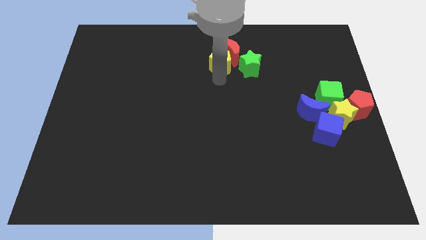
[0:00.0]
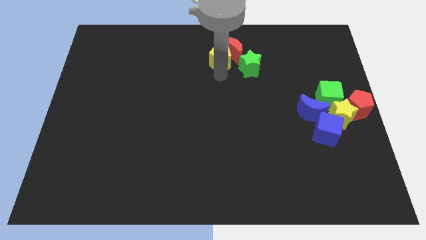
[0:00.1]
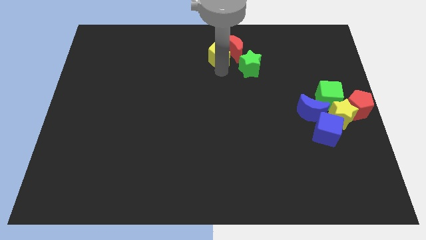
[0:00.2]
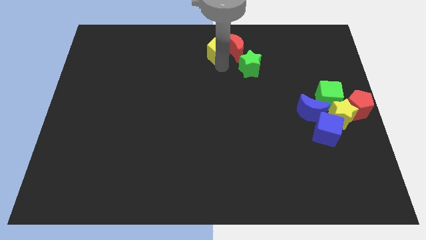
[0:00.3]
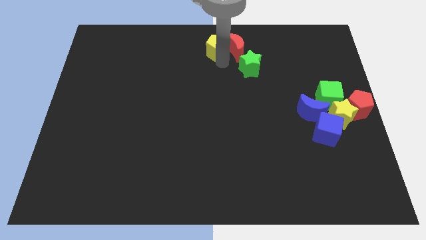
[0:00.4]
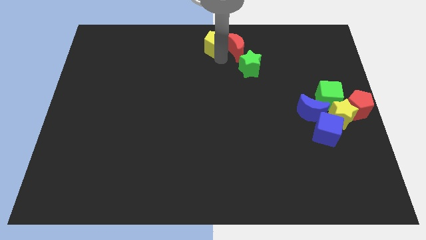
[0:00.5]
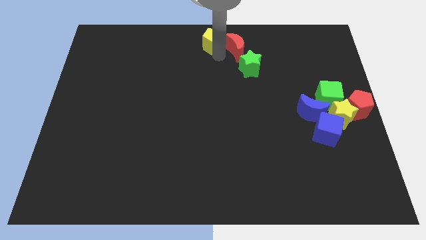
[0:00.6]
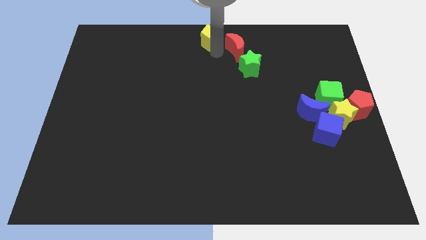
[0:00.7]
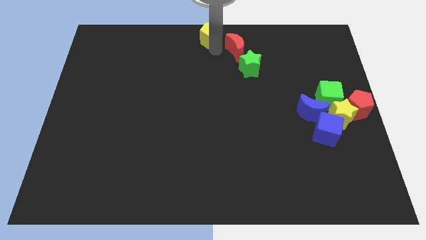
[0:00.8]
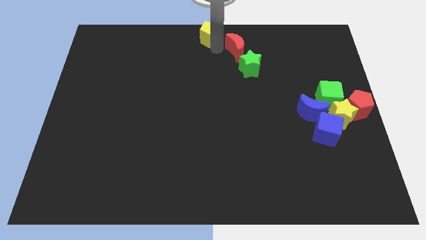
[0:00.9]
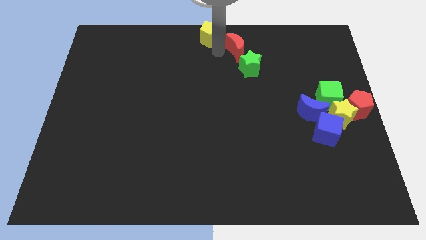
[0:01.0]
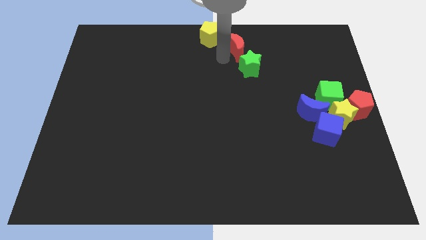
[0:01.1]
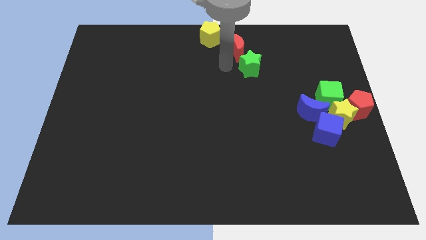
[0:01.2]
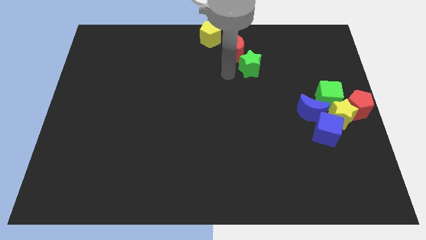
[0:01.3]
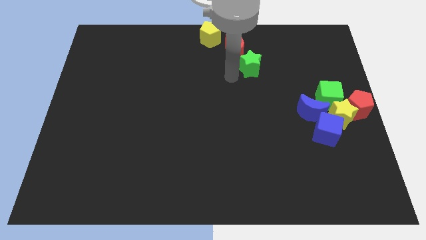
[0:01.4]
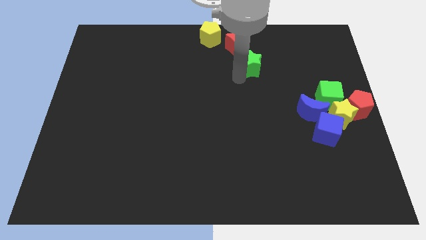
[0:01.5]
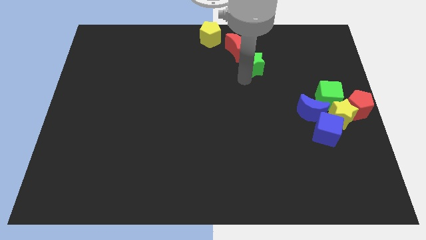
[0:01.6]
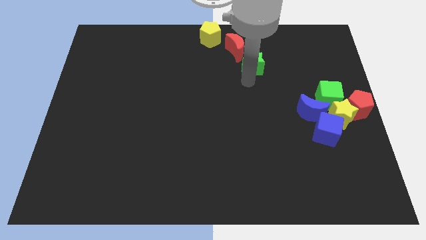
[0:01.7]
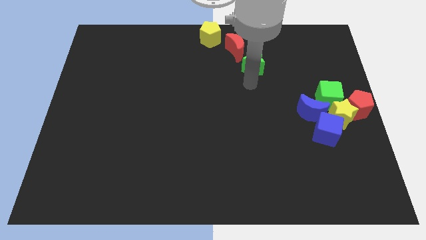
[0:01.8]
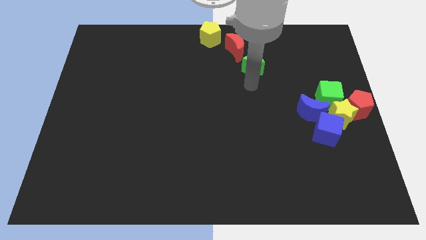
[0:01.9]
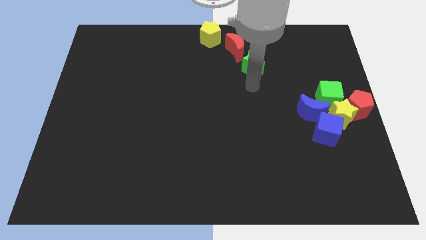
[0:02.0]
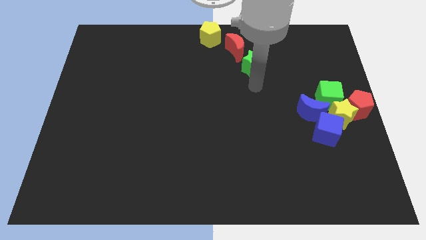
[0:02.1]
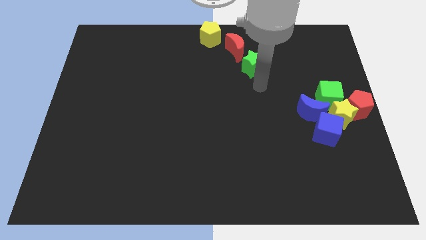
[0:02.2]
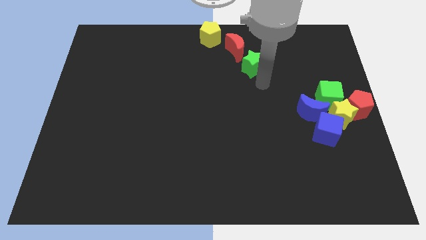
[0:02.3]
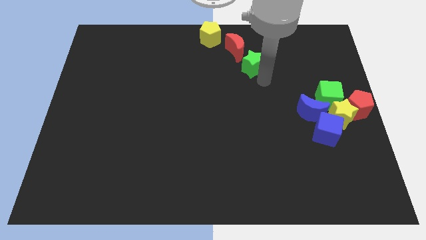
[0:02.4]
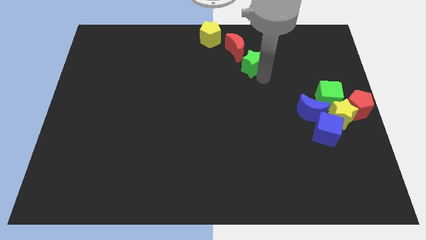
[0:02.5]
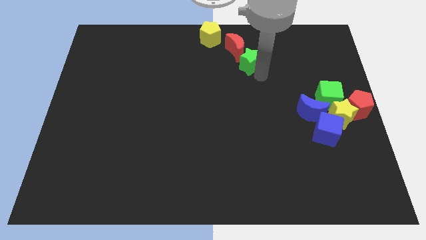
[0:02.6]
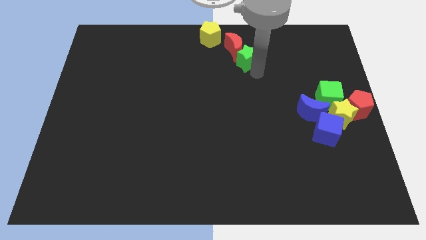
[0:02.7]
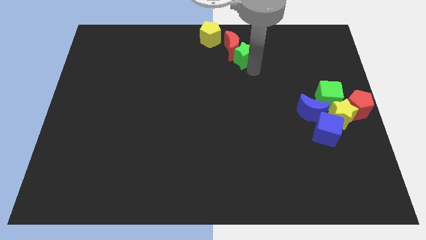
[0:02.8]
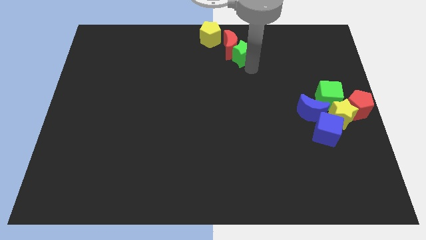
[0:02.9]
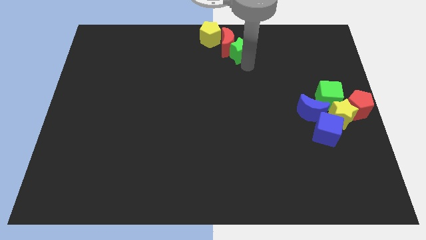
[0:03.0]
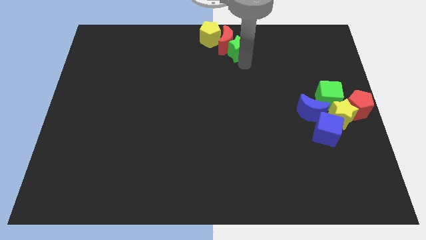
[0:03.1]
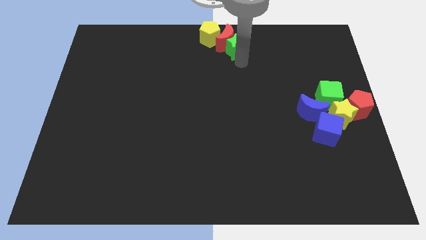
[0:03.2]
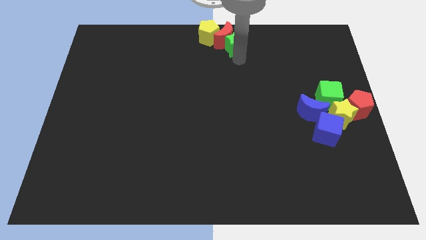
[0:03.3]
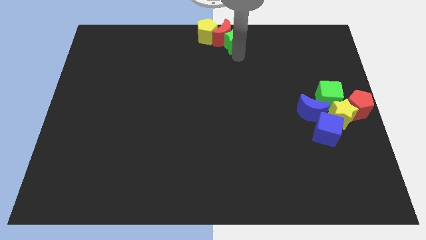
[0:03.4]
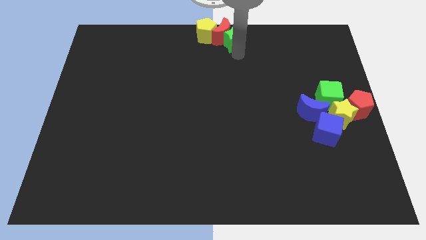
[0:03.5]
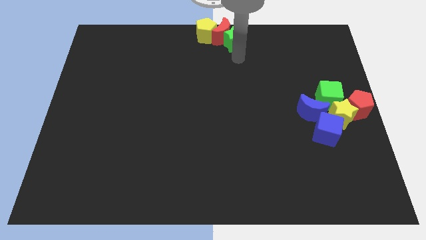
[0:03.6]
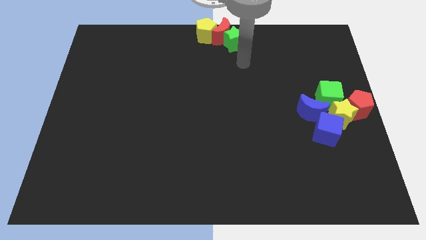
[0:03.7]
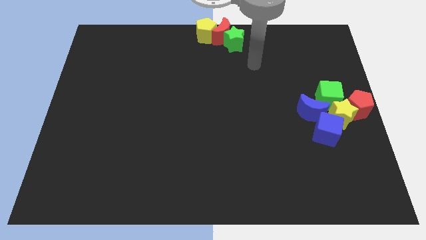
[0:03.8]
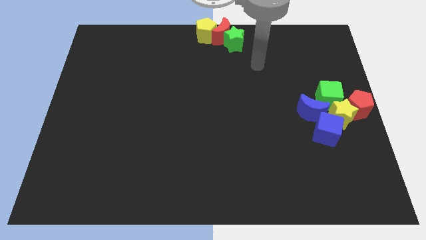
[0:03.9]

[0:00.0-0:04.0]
put the yellow pentagon green star and red moon at the top center

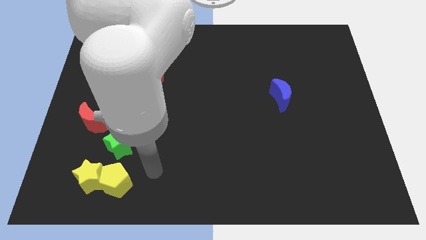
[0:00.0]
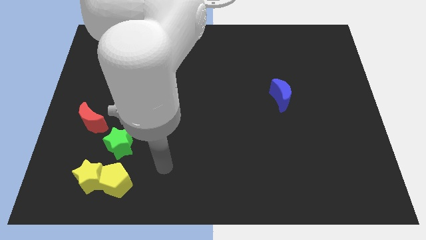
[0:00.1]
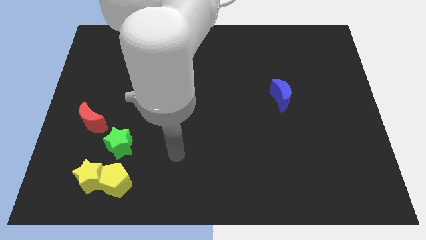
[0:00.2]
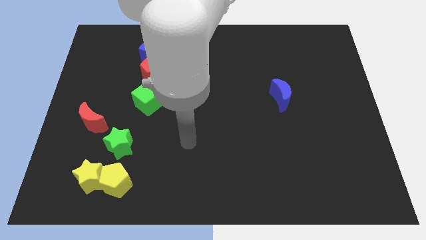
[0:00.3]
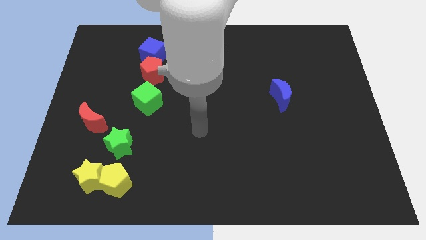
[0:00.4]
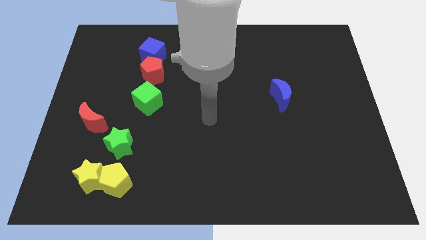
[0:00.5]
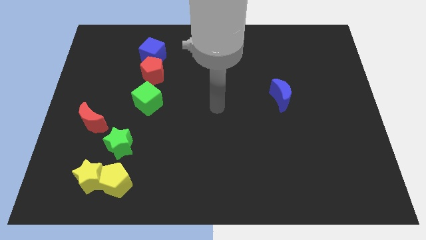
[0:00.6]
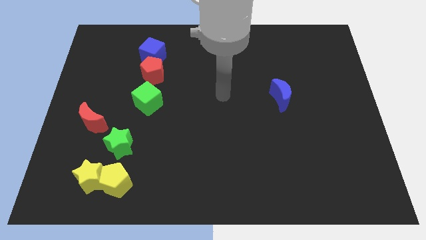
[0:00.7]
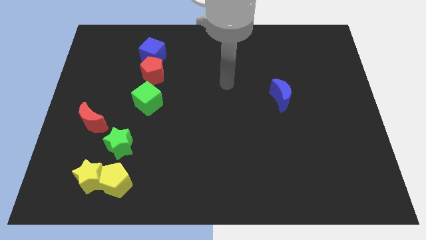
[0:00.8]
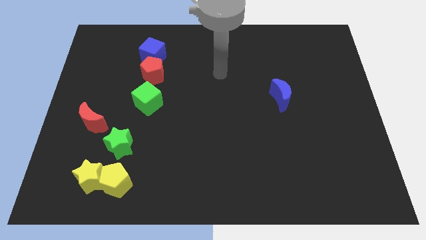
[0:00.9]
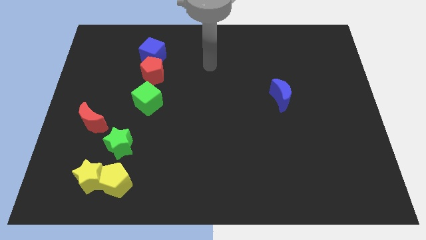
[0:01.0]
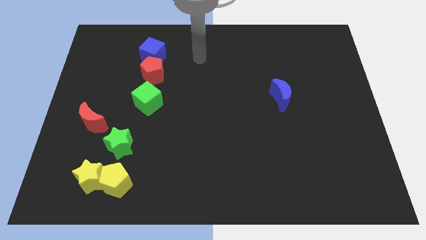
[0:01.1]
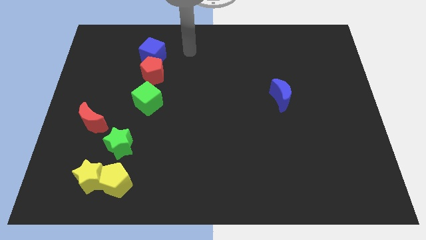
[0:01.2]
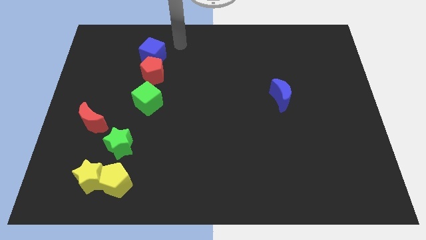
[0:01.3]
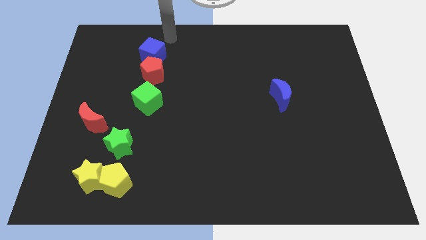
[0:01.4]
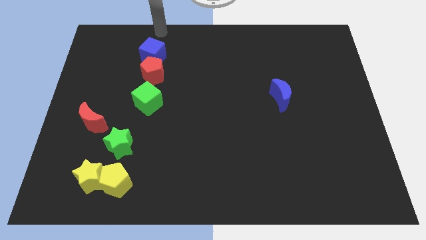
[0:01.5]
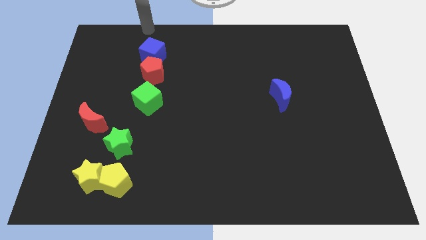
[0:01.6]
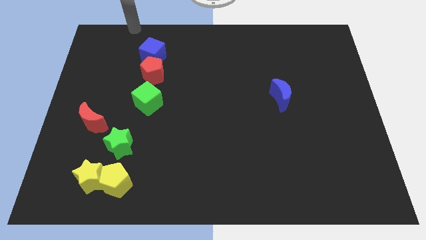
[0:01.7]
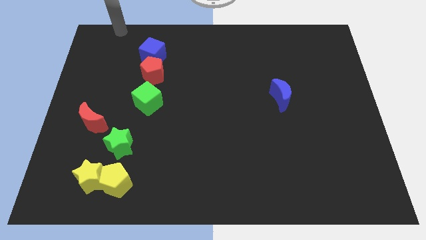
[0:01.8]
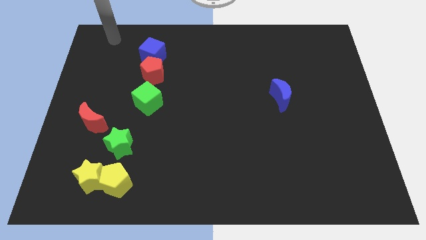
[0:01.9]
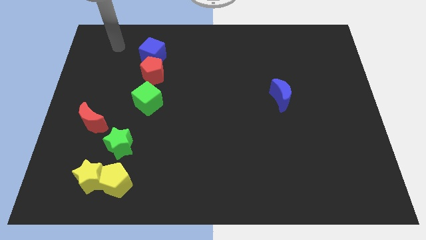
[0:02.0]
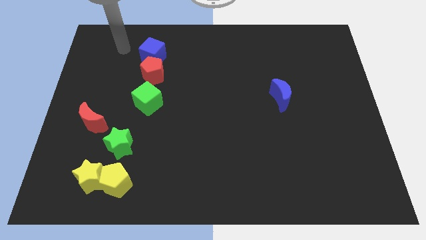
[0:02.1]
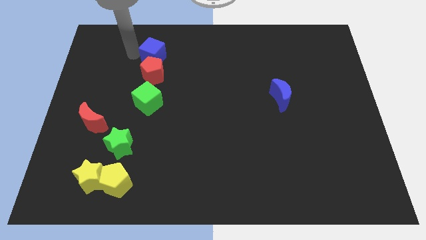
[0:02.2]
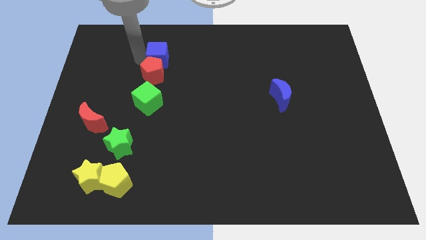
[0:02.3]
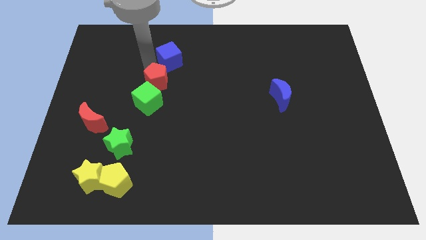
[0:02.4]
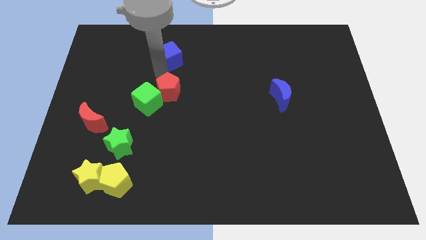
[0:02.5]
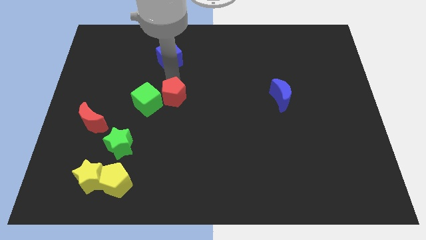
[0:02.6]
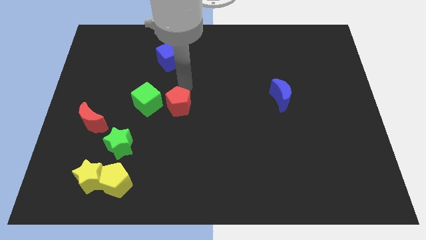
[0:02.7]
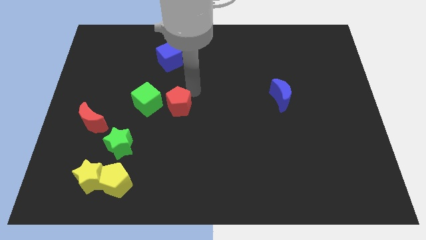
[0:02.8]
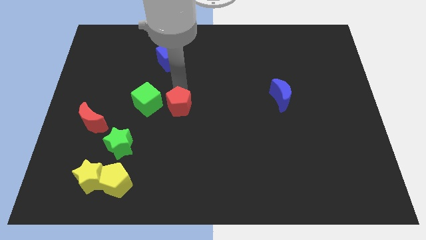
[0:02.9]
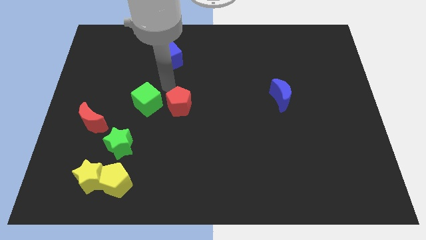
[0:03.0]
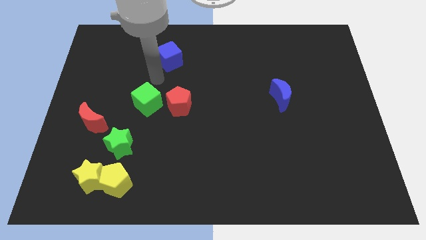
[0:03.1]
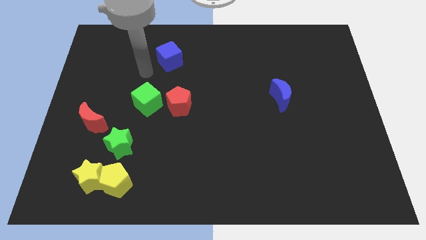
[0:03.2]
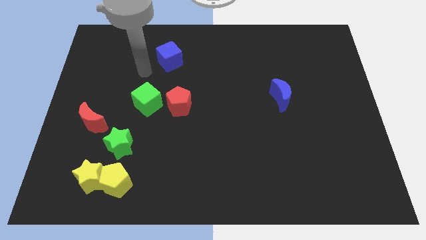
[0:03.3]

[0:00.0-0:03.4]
place the red pentagon right to the green cube

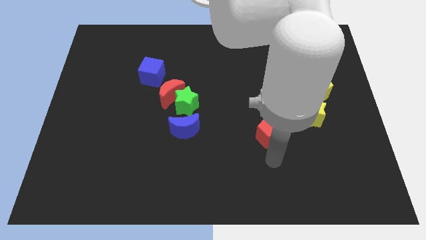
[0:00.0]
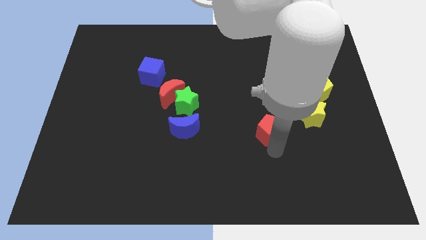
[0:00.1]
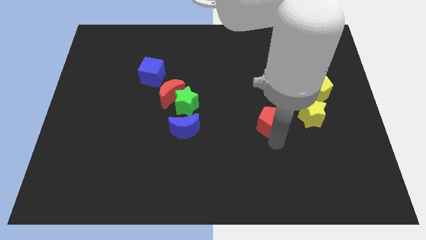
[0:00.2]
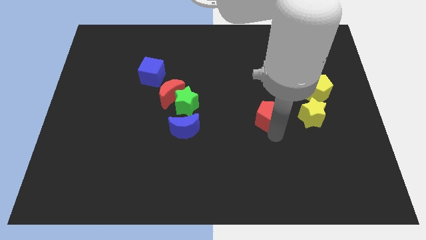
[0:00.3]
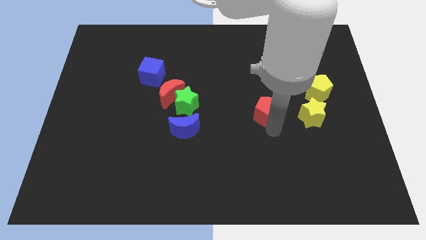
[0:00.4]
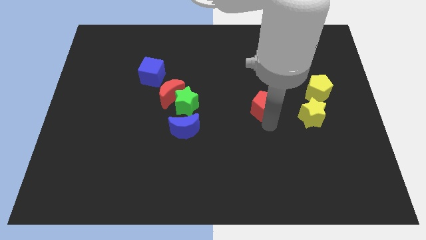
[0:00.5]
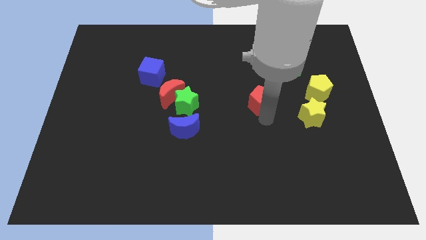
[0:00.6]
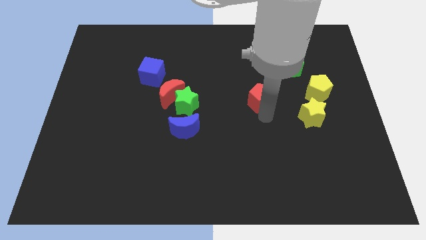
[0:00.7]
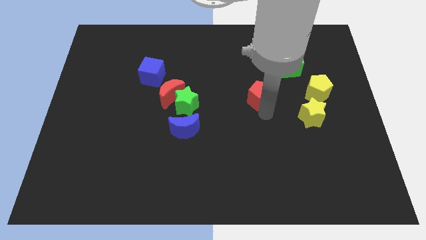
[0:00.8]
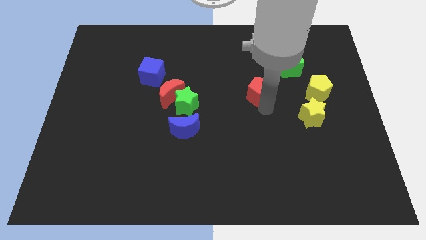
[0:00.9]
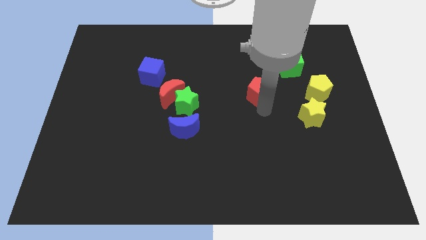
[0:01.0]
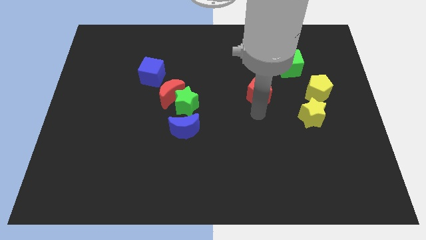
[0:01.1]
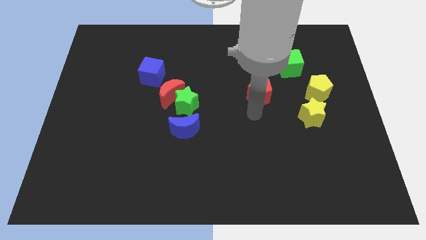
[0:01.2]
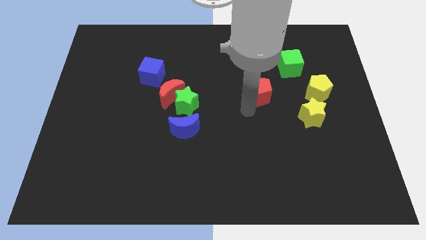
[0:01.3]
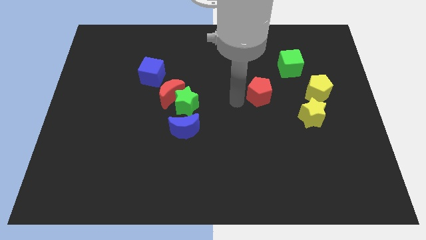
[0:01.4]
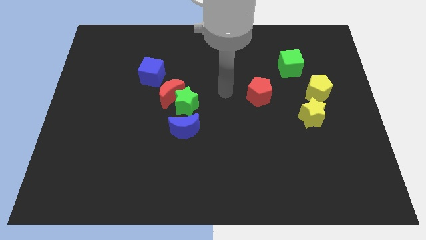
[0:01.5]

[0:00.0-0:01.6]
place the red pentagon to left side of the yellow pentagon
